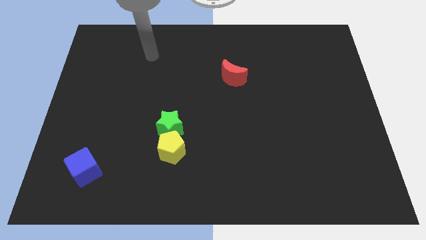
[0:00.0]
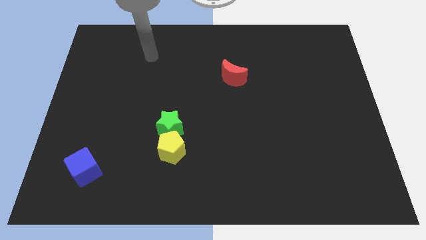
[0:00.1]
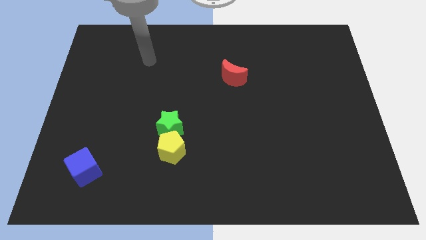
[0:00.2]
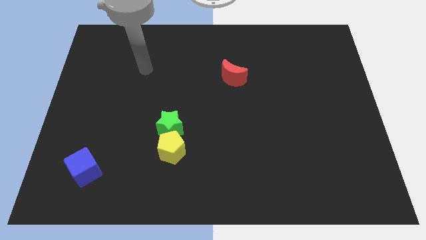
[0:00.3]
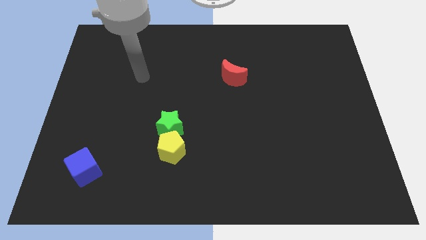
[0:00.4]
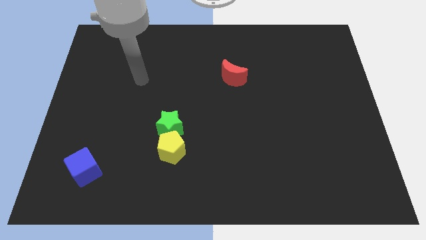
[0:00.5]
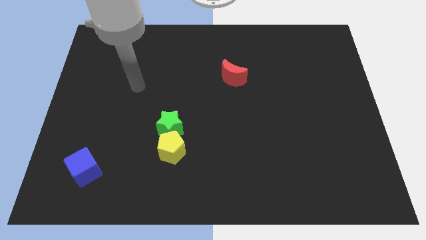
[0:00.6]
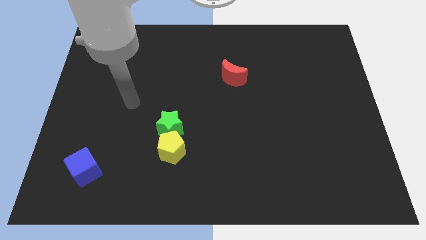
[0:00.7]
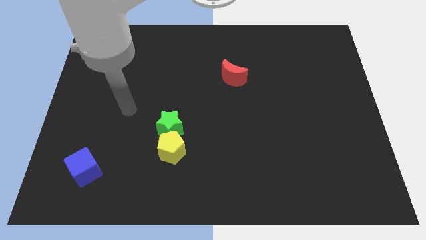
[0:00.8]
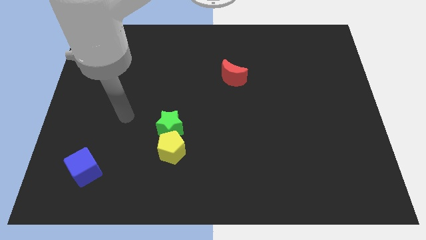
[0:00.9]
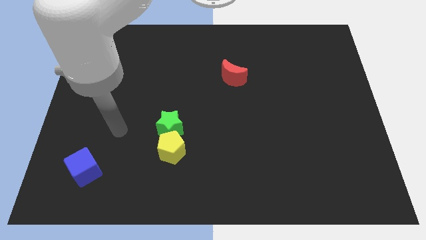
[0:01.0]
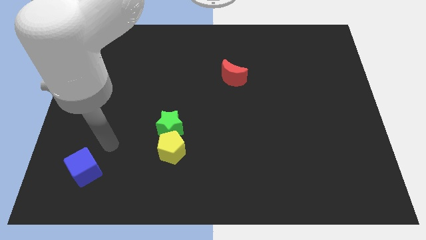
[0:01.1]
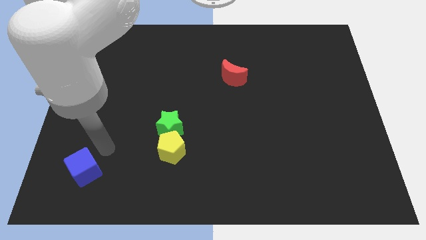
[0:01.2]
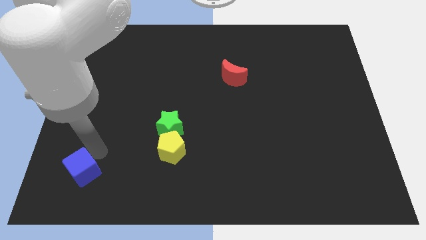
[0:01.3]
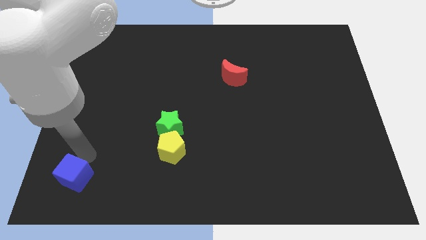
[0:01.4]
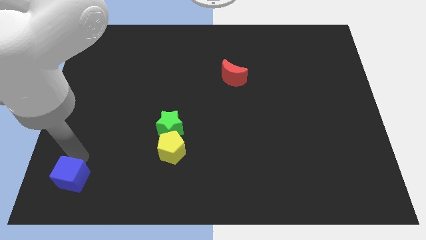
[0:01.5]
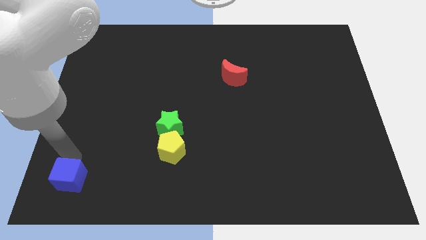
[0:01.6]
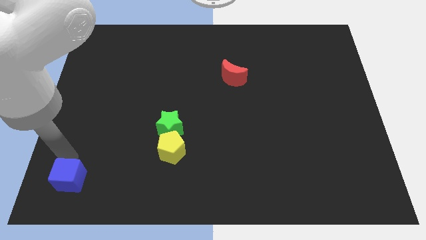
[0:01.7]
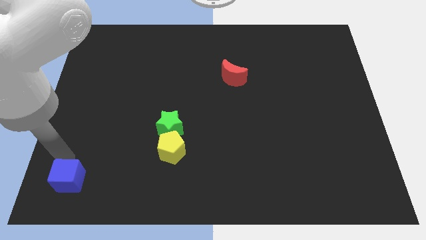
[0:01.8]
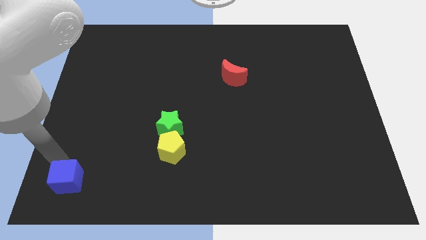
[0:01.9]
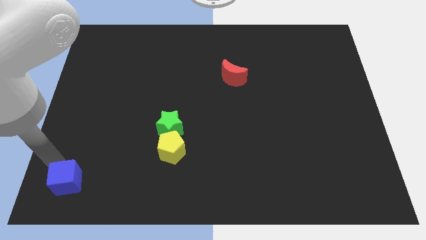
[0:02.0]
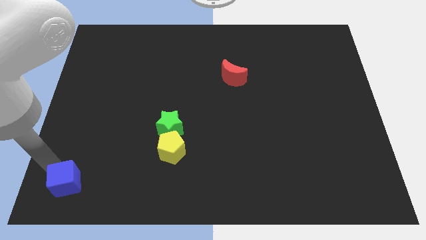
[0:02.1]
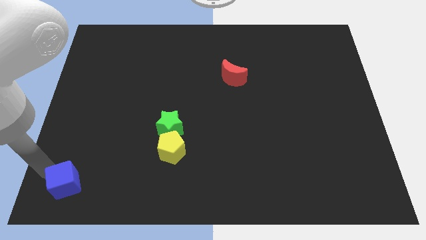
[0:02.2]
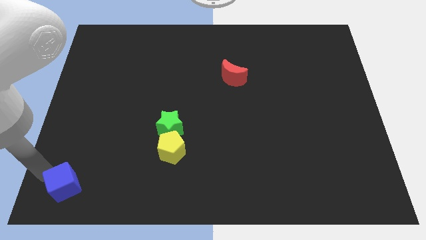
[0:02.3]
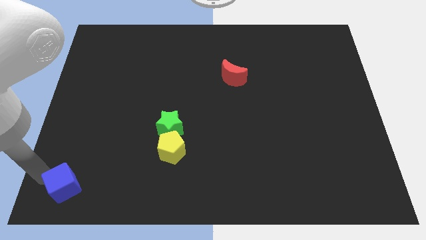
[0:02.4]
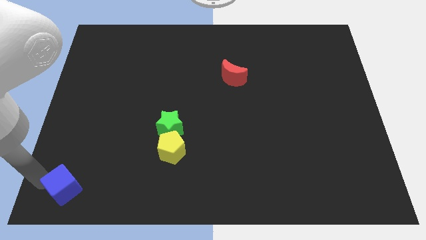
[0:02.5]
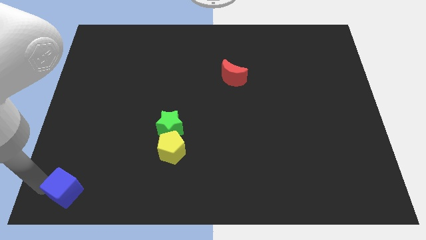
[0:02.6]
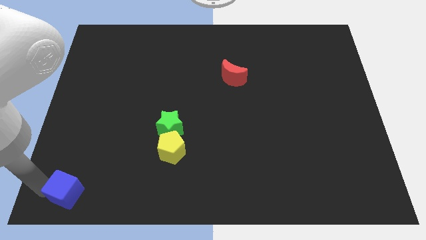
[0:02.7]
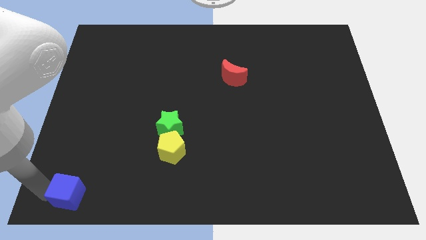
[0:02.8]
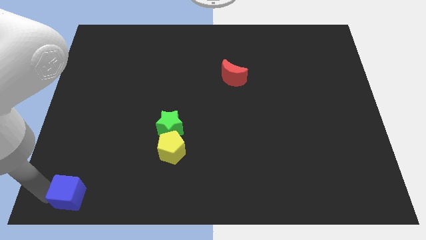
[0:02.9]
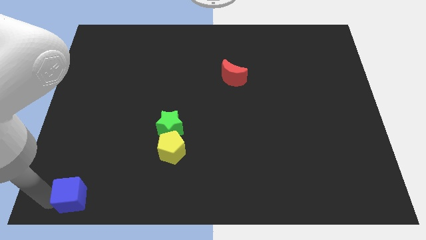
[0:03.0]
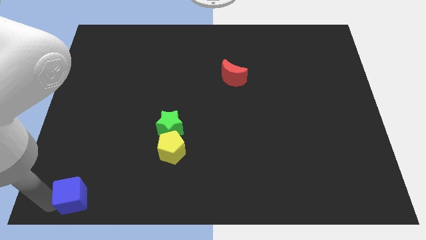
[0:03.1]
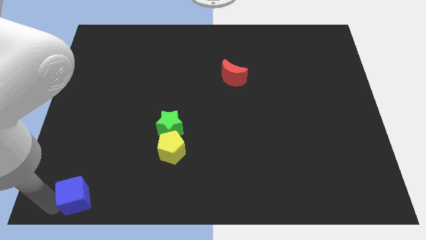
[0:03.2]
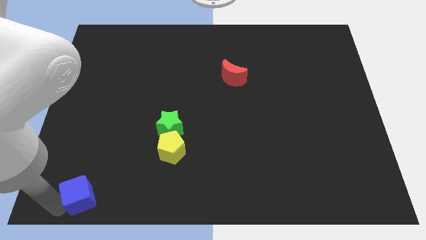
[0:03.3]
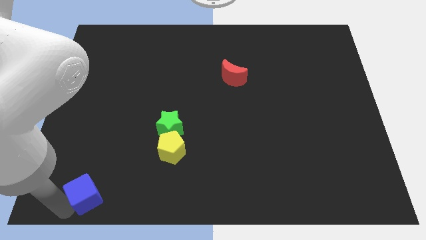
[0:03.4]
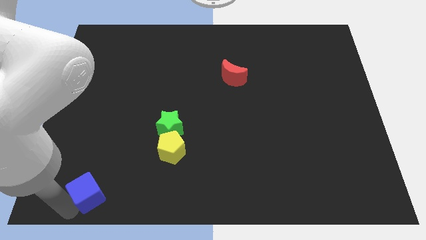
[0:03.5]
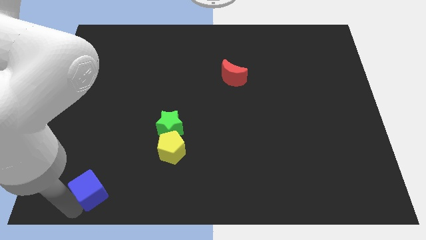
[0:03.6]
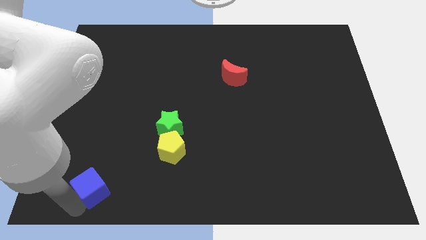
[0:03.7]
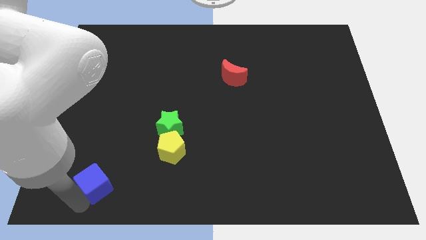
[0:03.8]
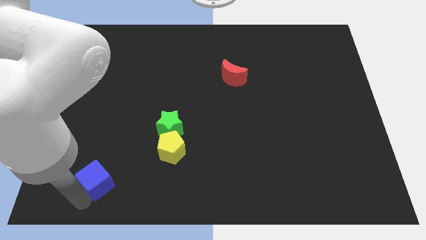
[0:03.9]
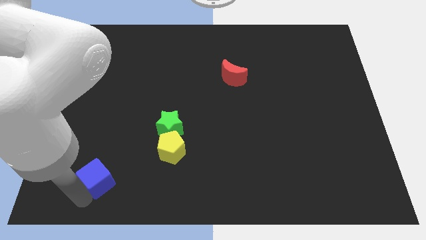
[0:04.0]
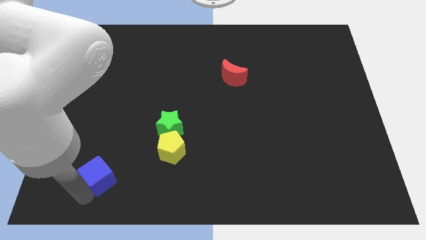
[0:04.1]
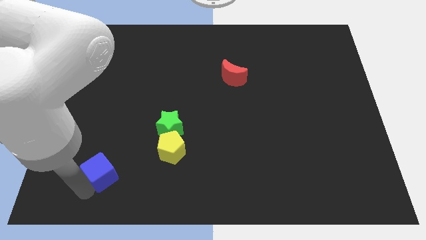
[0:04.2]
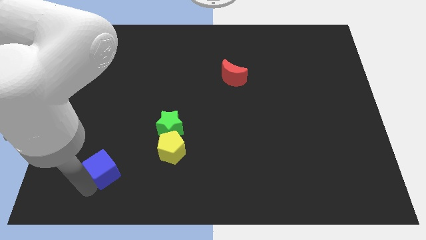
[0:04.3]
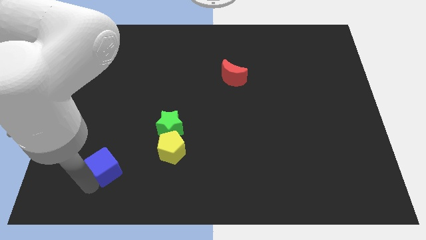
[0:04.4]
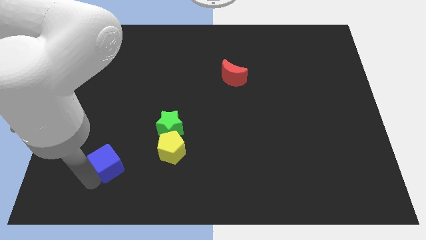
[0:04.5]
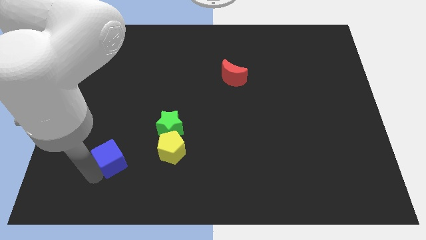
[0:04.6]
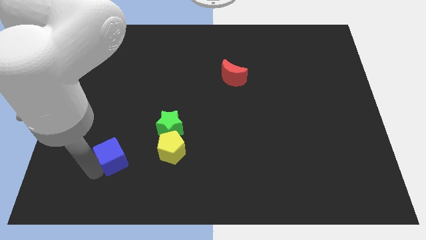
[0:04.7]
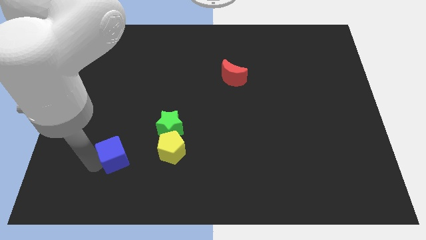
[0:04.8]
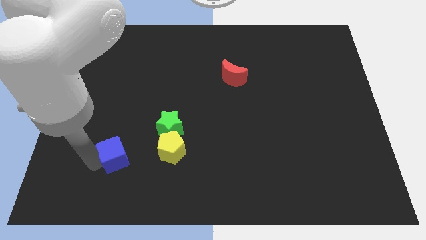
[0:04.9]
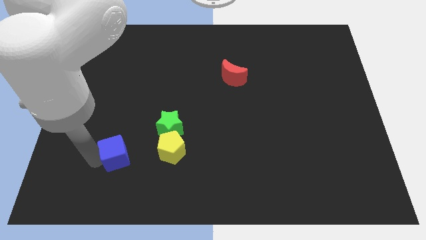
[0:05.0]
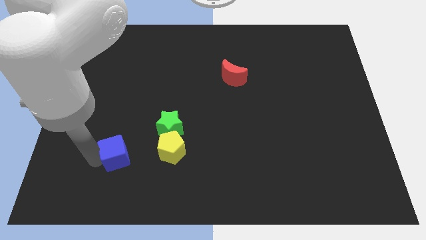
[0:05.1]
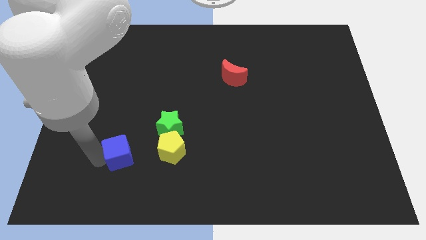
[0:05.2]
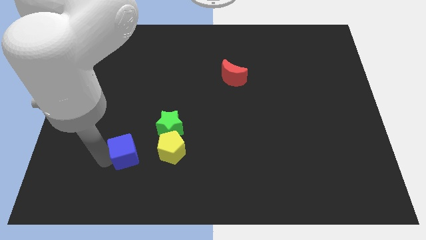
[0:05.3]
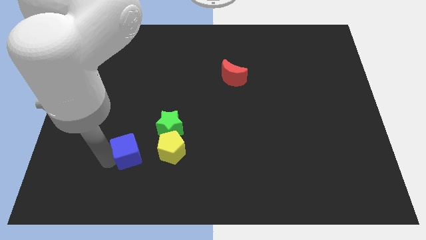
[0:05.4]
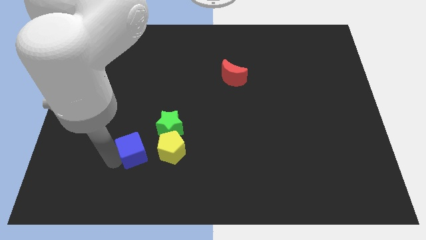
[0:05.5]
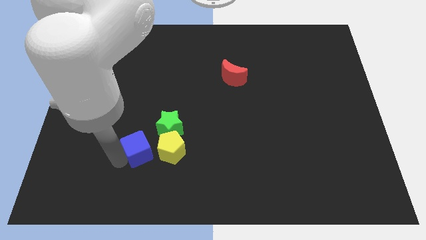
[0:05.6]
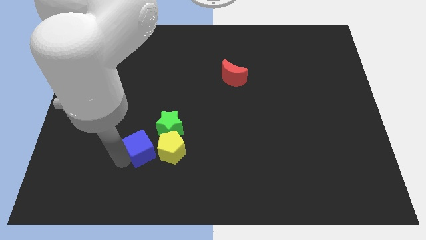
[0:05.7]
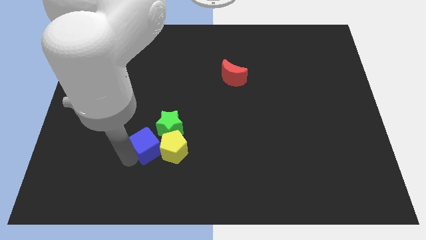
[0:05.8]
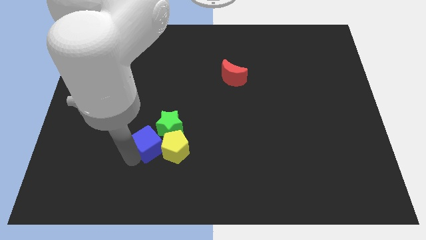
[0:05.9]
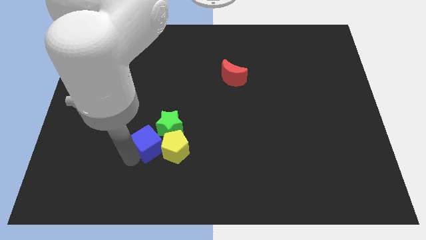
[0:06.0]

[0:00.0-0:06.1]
slide the blue block next to the yellow pentagon

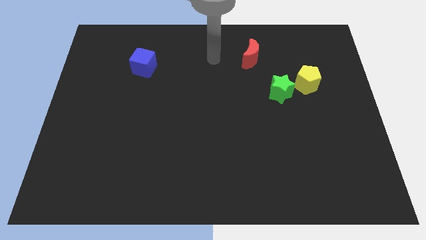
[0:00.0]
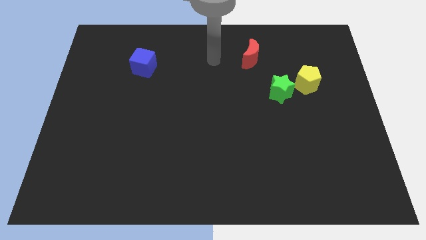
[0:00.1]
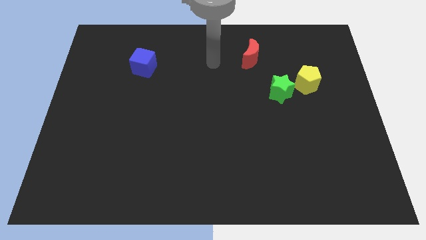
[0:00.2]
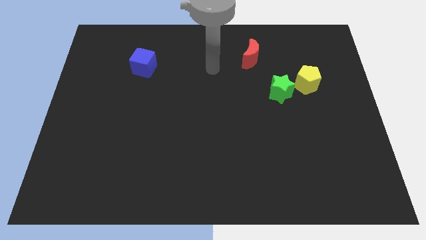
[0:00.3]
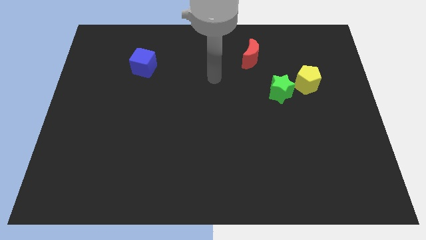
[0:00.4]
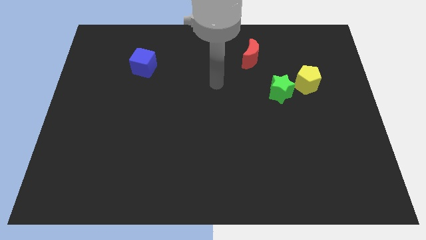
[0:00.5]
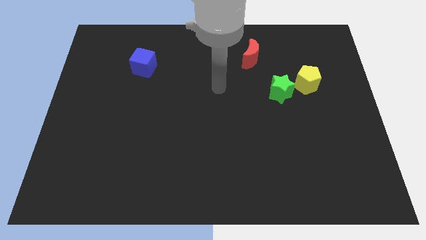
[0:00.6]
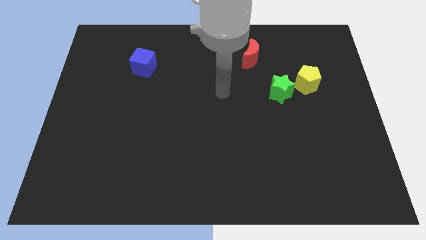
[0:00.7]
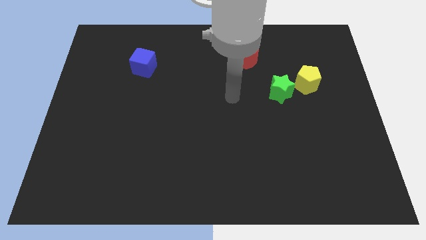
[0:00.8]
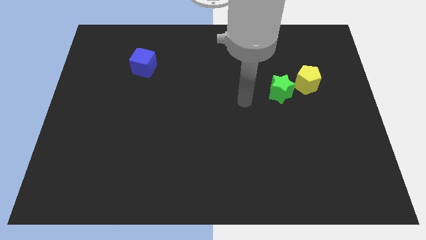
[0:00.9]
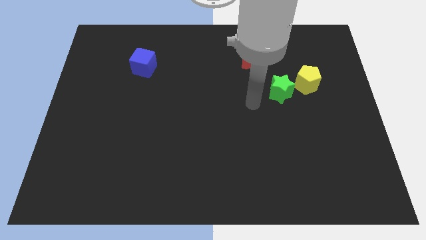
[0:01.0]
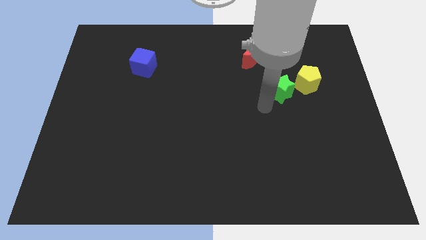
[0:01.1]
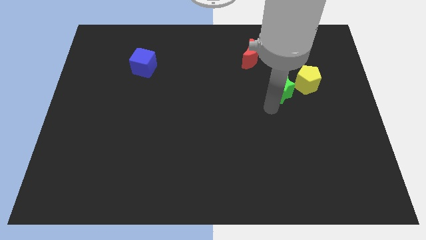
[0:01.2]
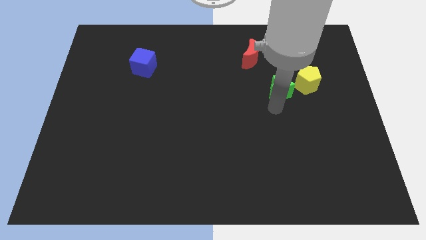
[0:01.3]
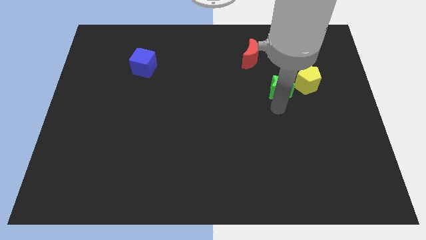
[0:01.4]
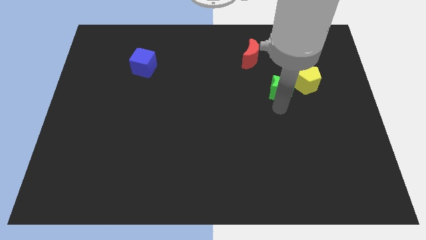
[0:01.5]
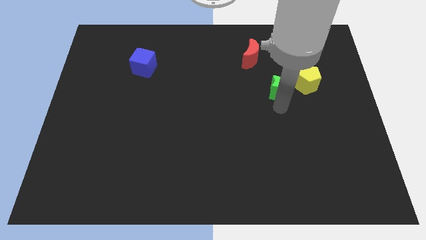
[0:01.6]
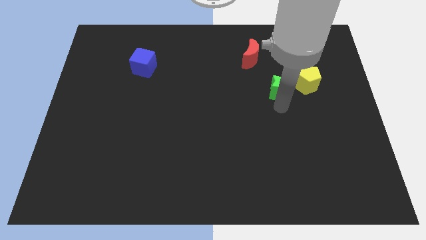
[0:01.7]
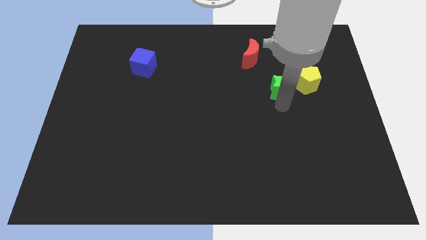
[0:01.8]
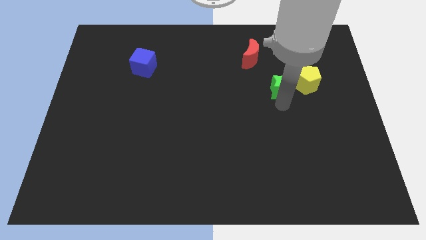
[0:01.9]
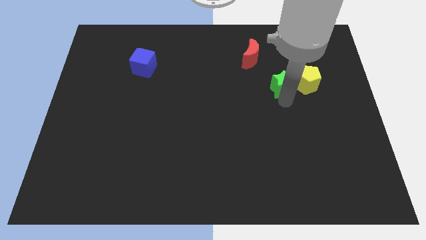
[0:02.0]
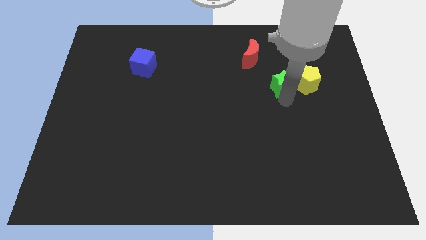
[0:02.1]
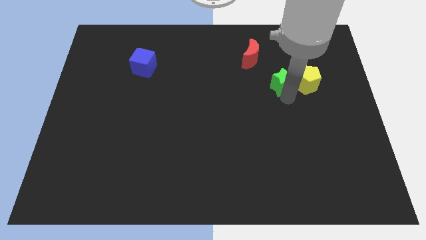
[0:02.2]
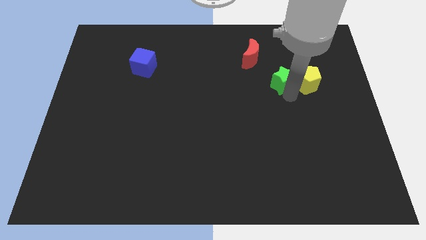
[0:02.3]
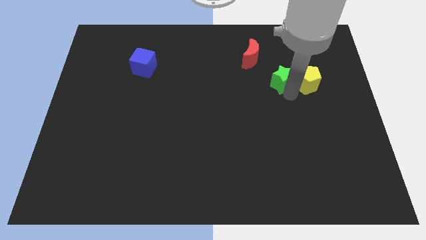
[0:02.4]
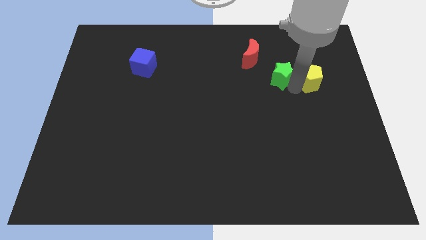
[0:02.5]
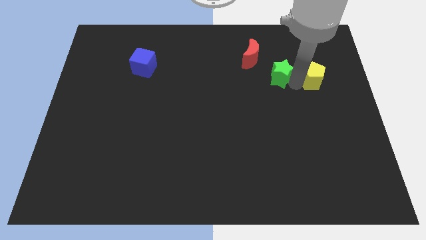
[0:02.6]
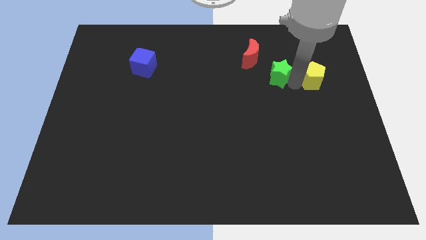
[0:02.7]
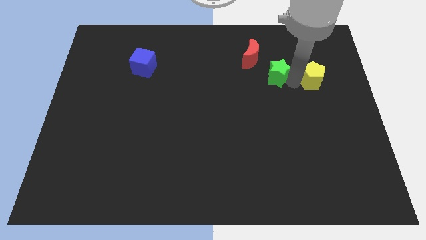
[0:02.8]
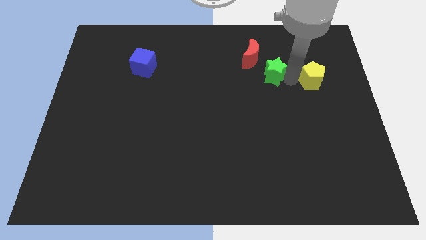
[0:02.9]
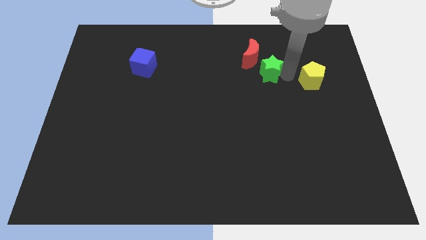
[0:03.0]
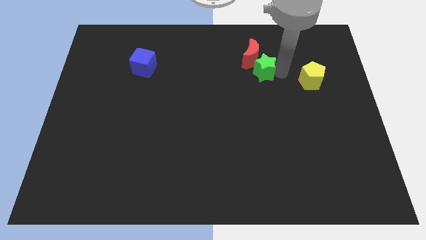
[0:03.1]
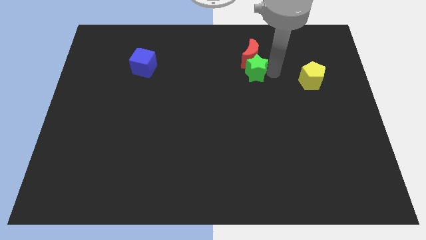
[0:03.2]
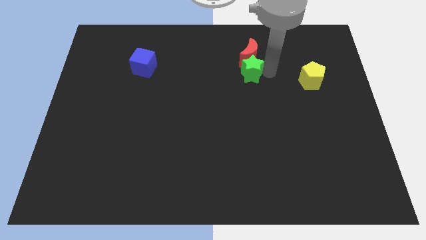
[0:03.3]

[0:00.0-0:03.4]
push the star towards the red moon
